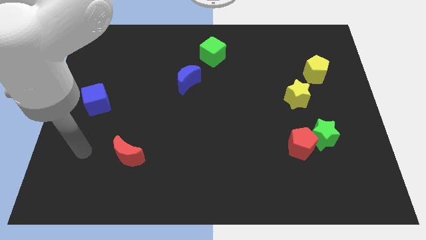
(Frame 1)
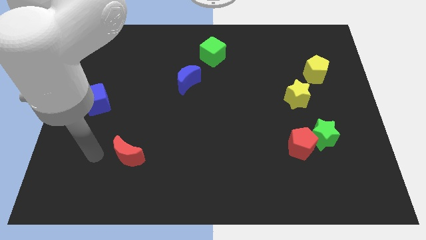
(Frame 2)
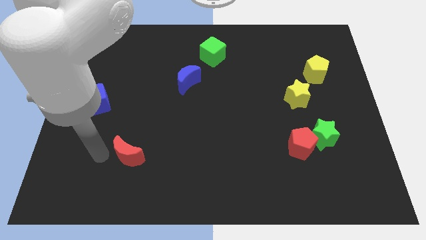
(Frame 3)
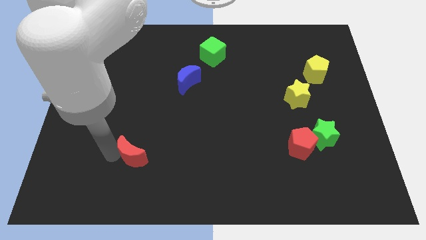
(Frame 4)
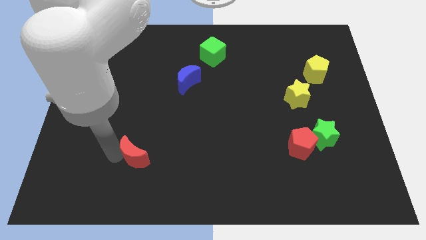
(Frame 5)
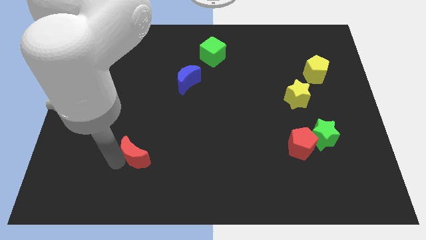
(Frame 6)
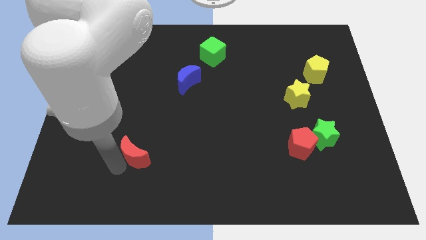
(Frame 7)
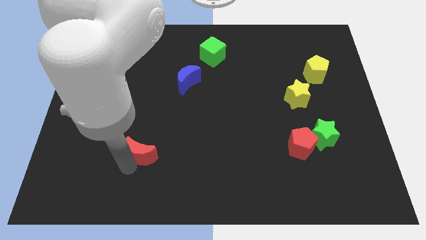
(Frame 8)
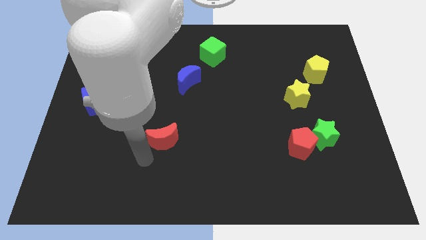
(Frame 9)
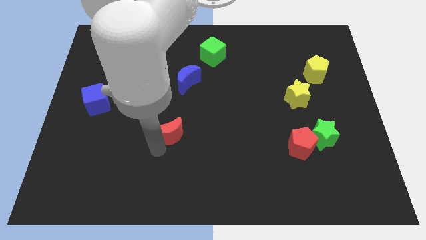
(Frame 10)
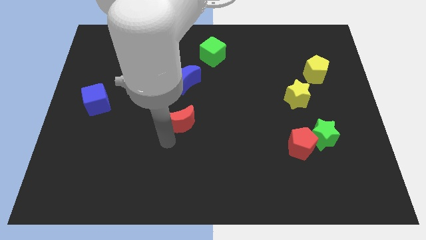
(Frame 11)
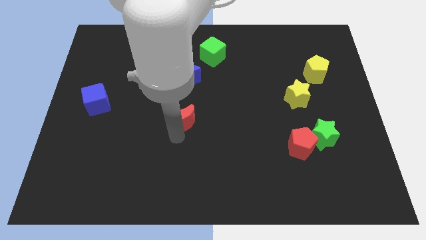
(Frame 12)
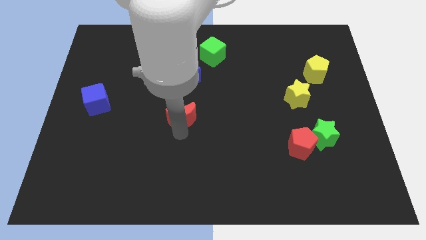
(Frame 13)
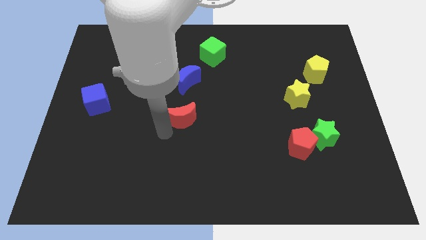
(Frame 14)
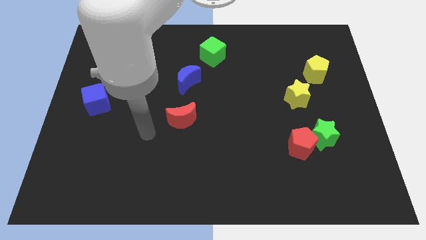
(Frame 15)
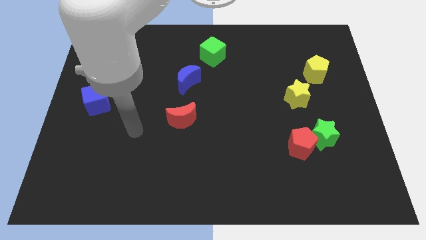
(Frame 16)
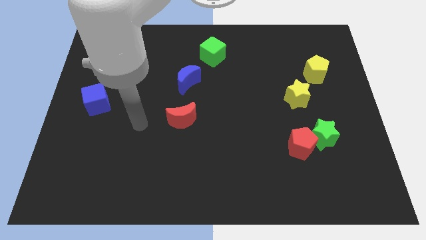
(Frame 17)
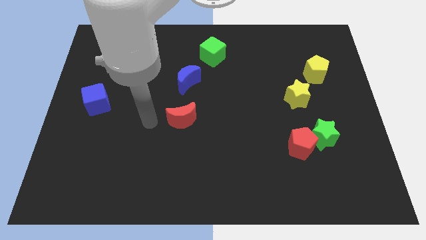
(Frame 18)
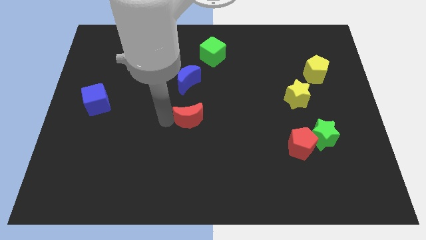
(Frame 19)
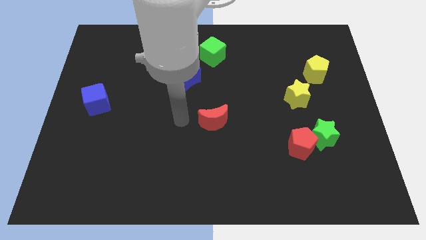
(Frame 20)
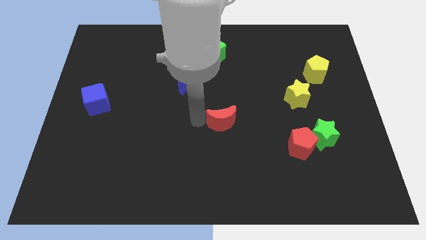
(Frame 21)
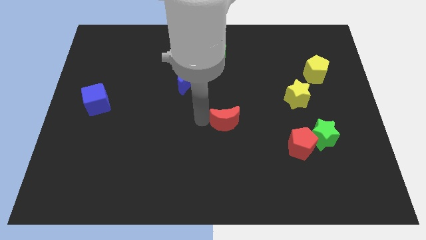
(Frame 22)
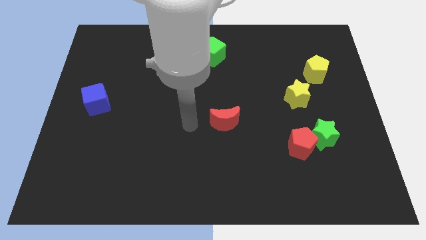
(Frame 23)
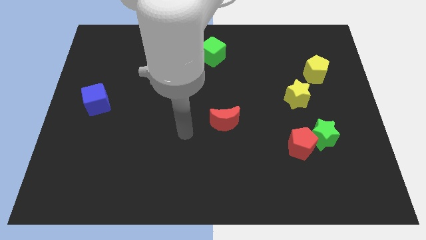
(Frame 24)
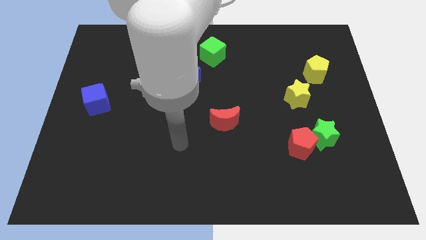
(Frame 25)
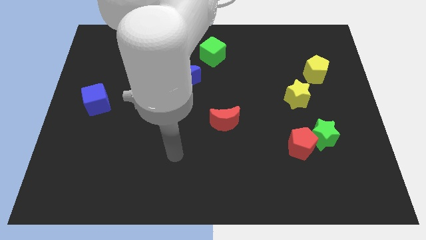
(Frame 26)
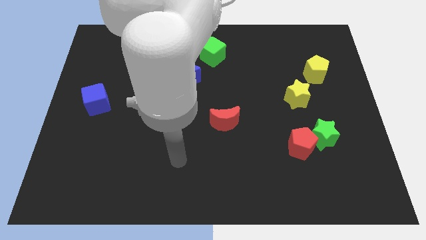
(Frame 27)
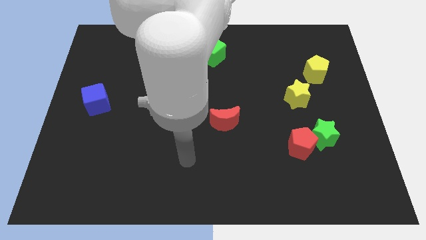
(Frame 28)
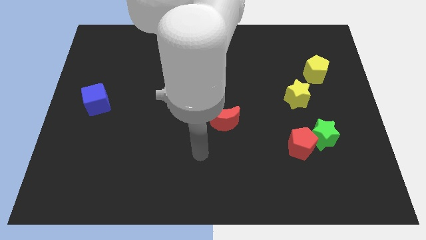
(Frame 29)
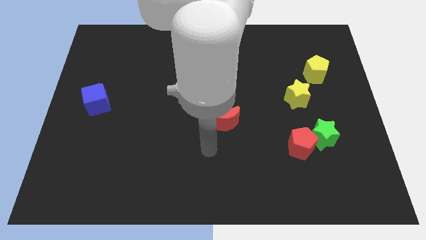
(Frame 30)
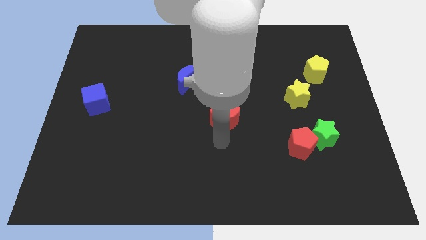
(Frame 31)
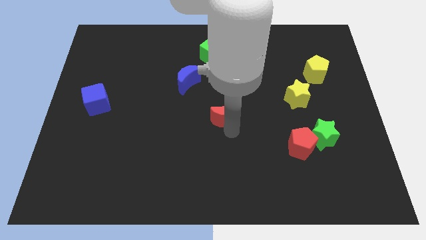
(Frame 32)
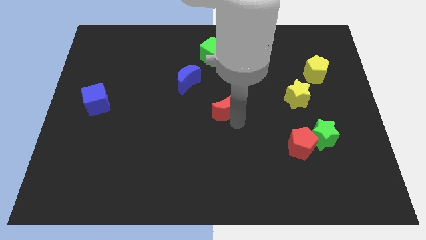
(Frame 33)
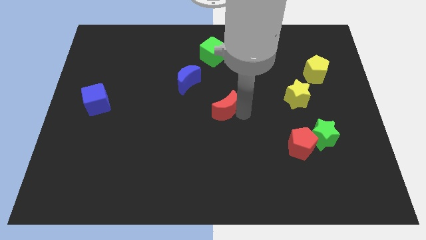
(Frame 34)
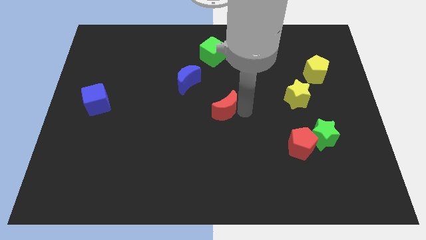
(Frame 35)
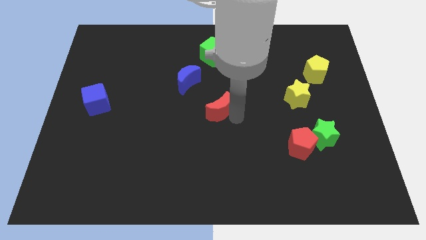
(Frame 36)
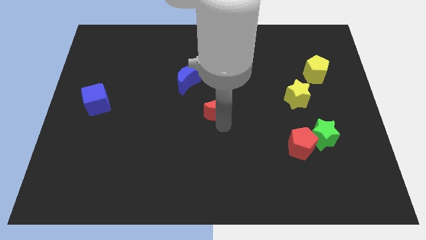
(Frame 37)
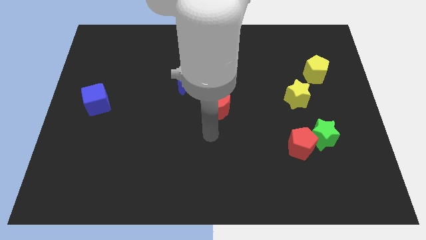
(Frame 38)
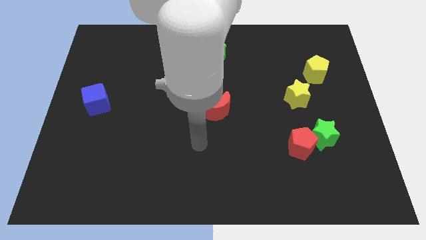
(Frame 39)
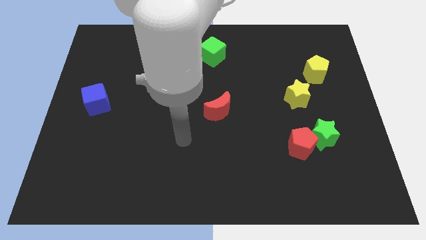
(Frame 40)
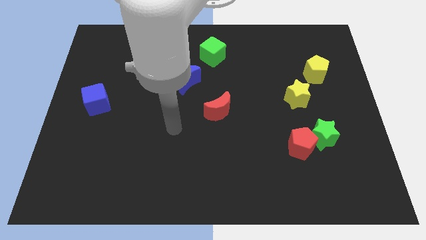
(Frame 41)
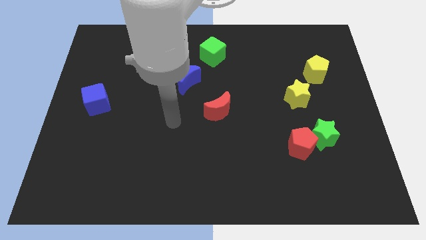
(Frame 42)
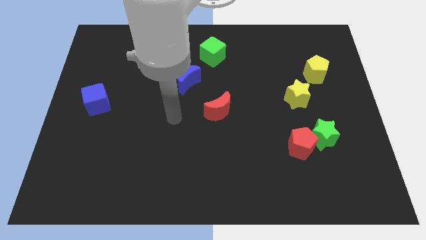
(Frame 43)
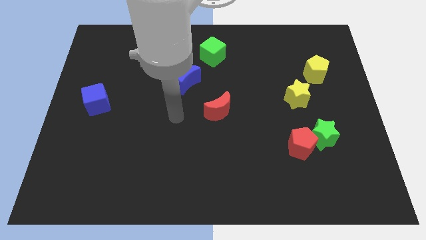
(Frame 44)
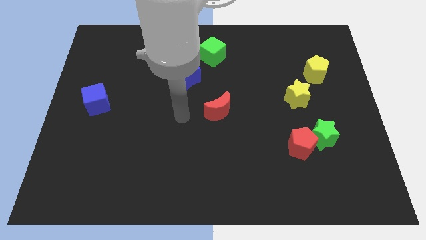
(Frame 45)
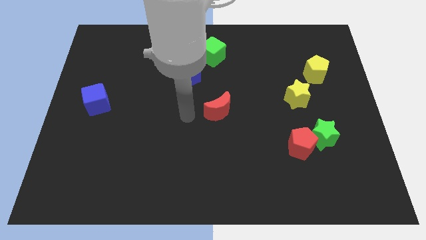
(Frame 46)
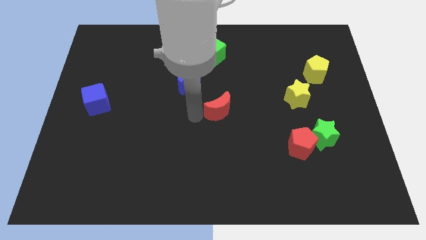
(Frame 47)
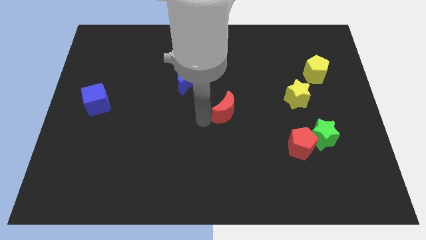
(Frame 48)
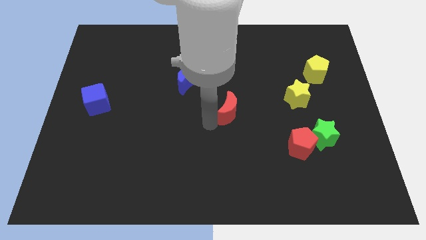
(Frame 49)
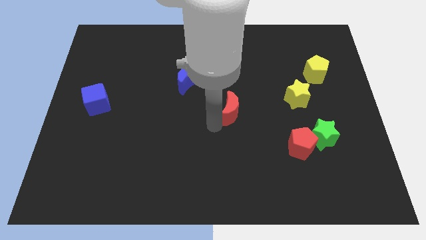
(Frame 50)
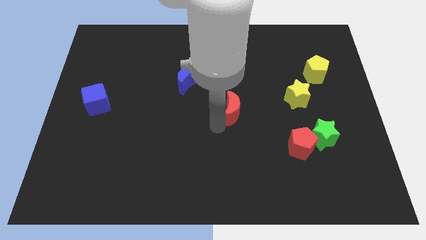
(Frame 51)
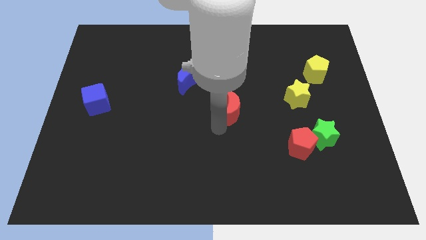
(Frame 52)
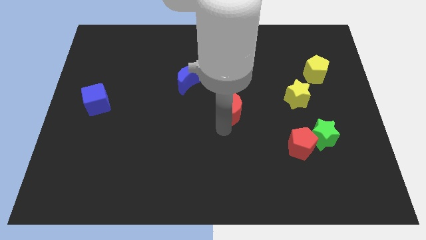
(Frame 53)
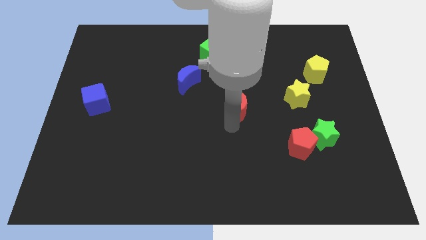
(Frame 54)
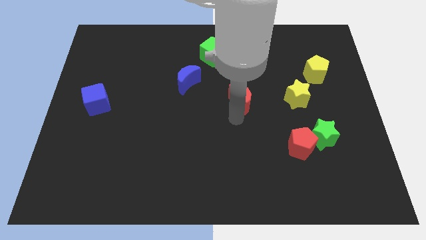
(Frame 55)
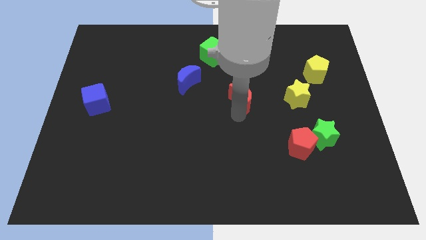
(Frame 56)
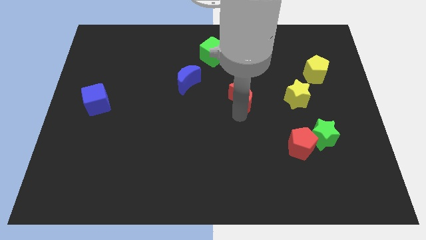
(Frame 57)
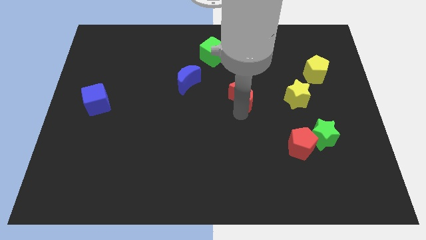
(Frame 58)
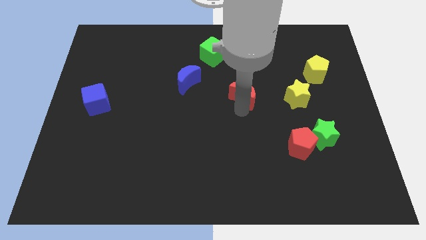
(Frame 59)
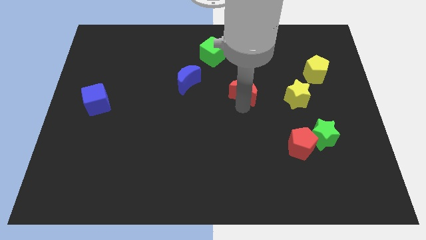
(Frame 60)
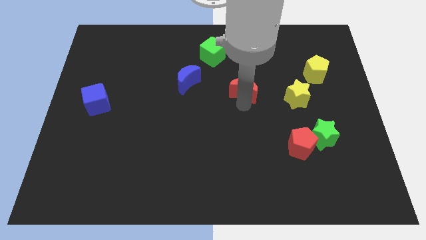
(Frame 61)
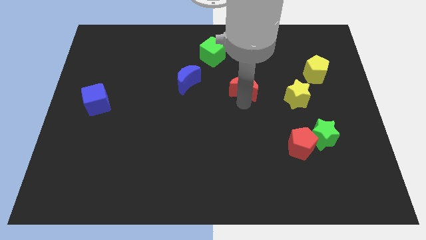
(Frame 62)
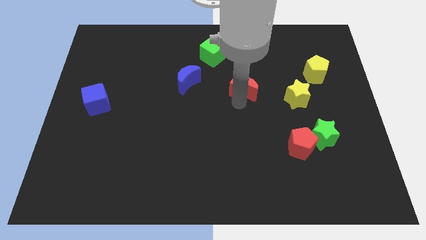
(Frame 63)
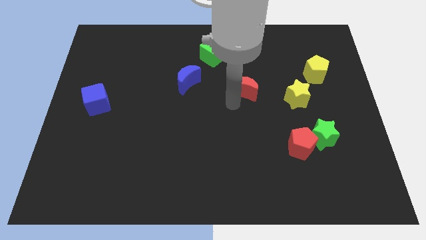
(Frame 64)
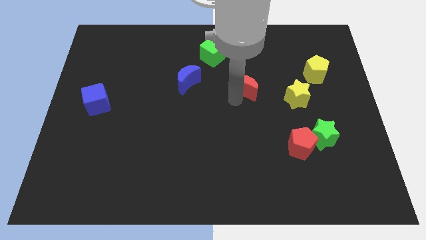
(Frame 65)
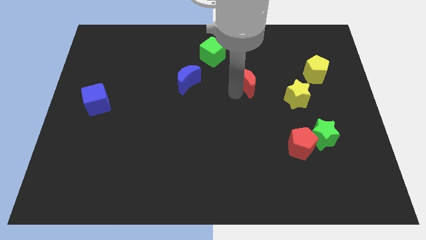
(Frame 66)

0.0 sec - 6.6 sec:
place the red moon horizontally right to the blue moon

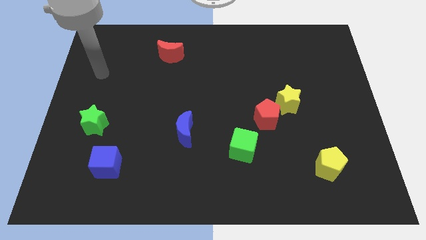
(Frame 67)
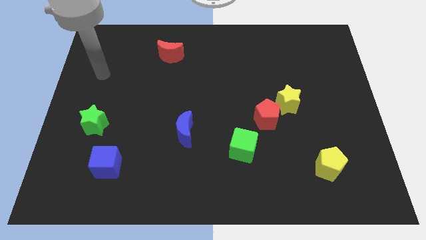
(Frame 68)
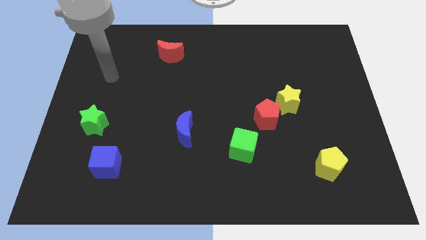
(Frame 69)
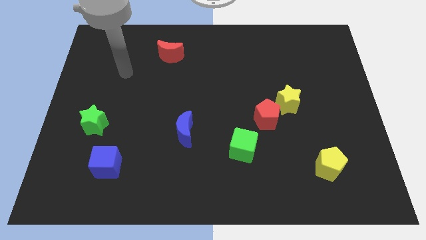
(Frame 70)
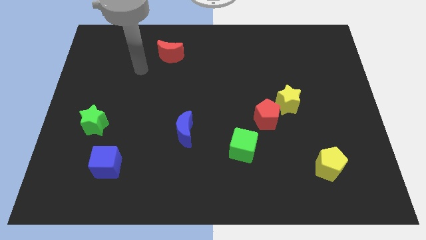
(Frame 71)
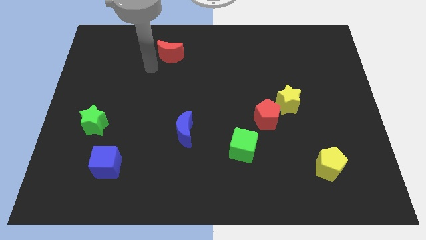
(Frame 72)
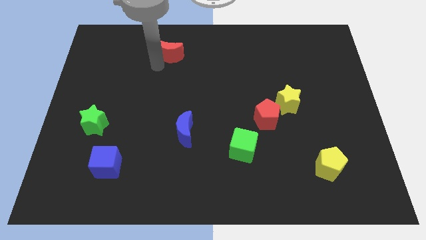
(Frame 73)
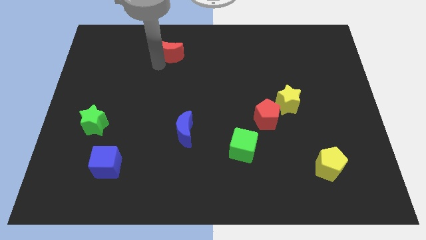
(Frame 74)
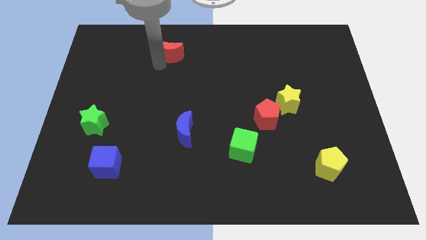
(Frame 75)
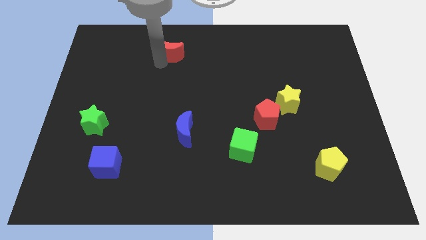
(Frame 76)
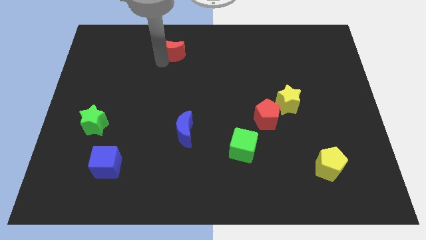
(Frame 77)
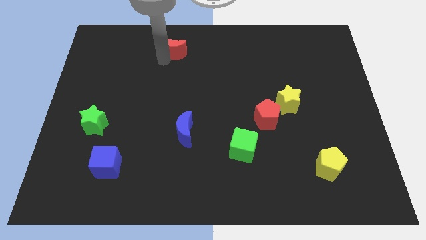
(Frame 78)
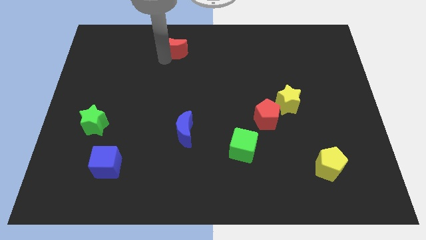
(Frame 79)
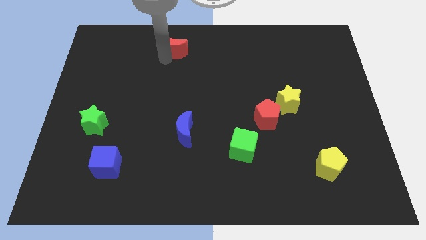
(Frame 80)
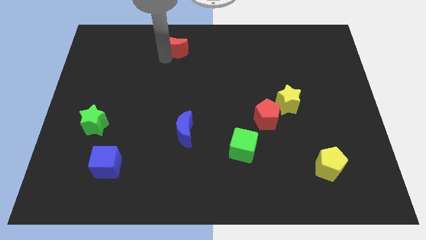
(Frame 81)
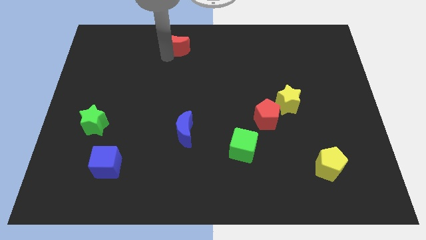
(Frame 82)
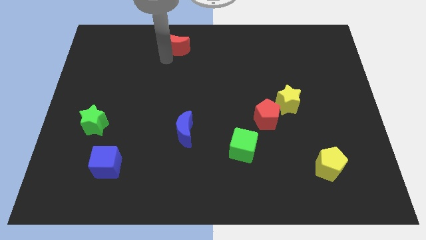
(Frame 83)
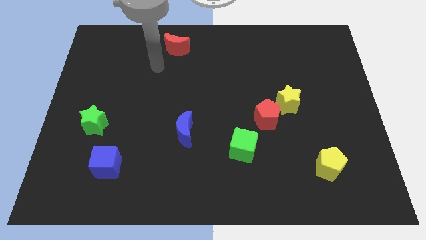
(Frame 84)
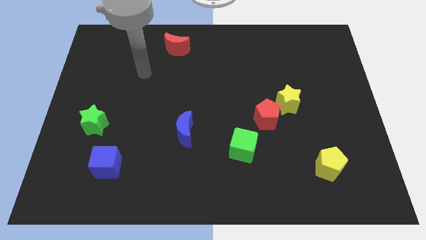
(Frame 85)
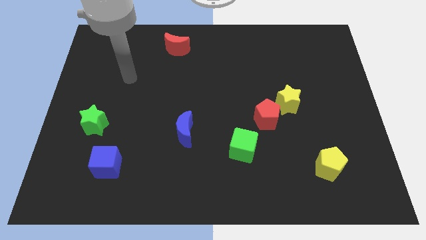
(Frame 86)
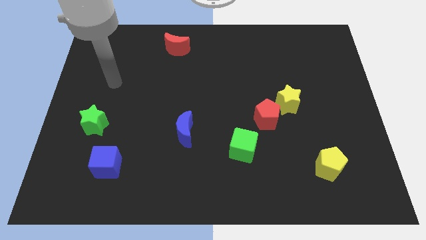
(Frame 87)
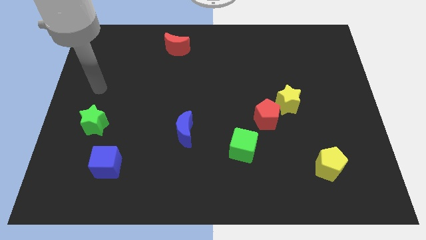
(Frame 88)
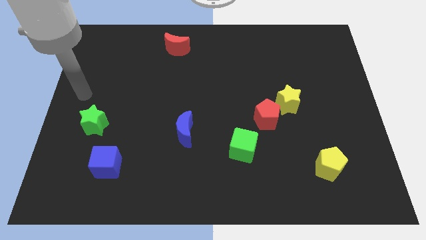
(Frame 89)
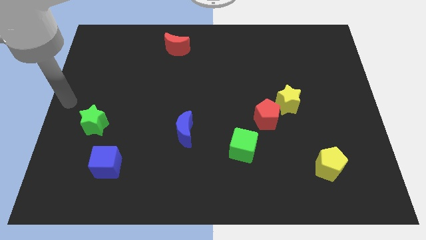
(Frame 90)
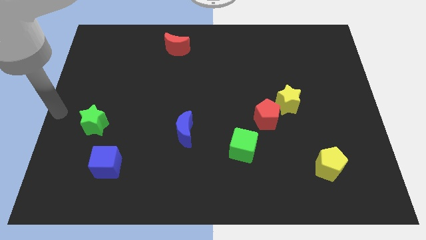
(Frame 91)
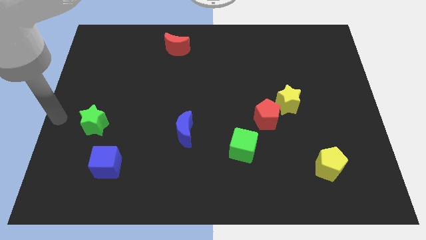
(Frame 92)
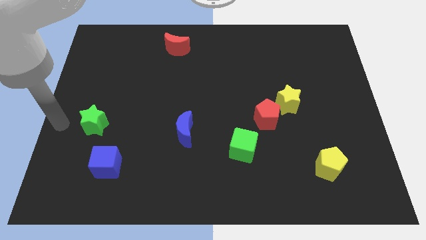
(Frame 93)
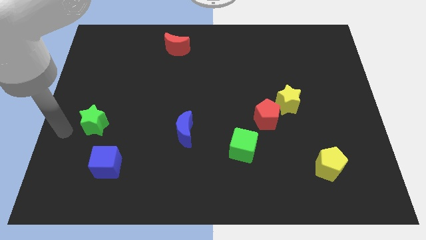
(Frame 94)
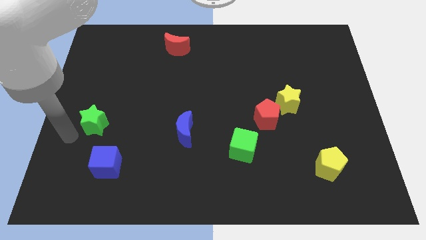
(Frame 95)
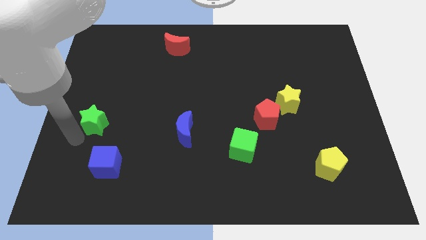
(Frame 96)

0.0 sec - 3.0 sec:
push the red crescent to the top of the board
